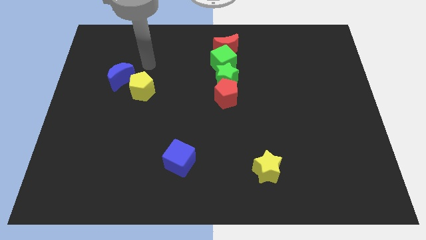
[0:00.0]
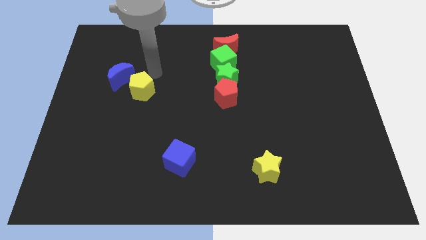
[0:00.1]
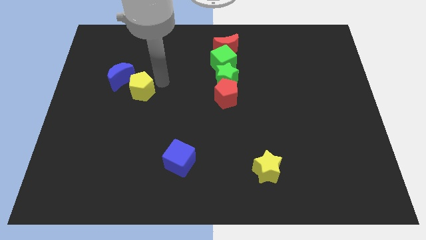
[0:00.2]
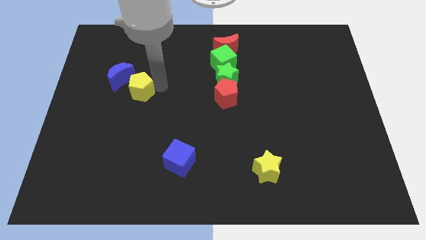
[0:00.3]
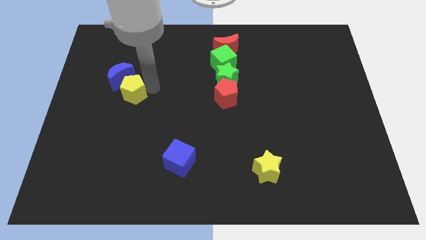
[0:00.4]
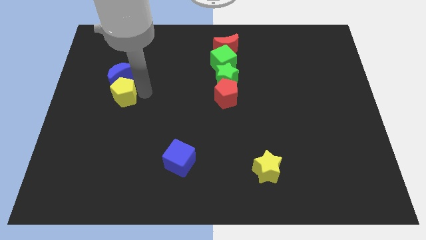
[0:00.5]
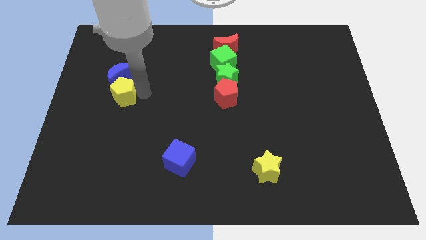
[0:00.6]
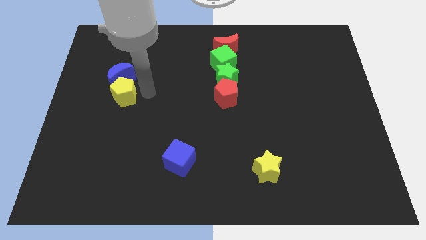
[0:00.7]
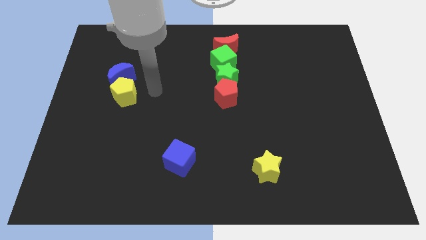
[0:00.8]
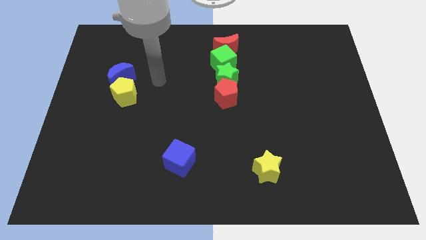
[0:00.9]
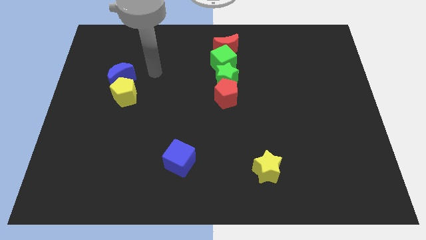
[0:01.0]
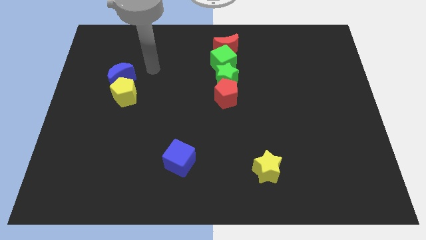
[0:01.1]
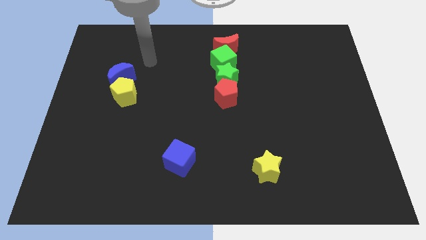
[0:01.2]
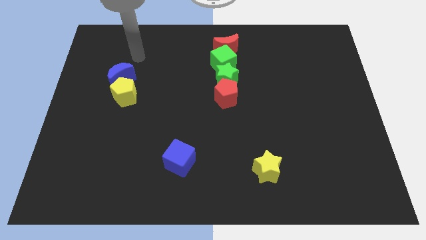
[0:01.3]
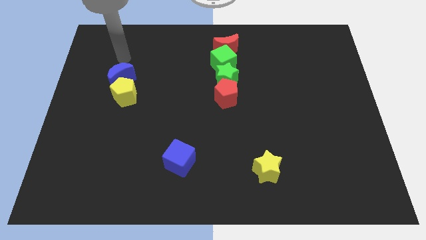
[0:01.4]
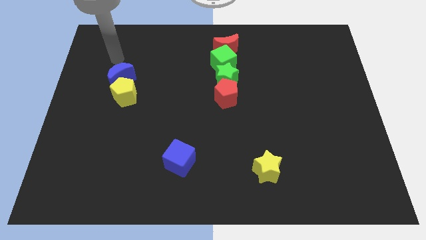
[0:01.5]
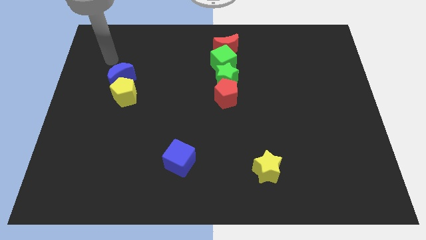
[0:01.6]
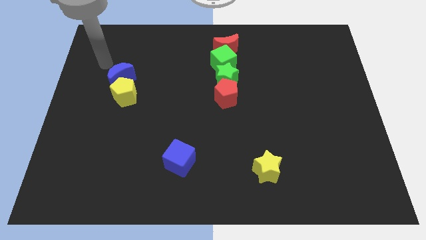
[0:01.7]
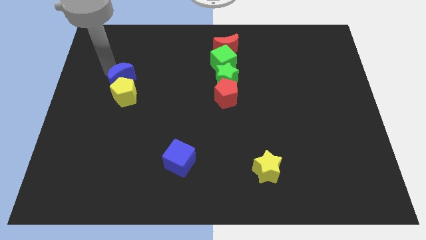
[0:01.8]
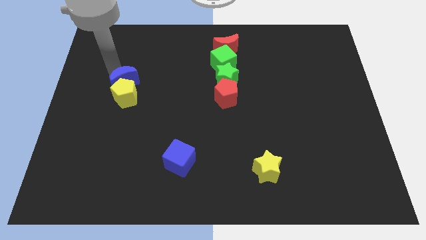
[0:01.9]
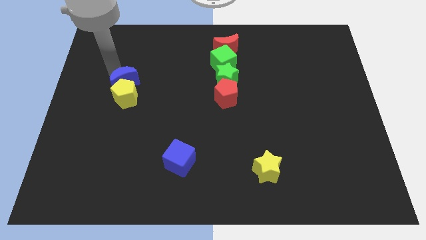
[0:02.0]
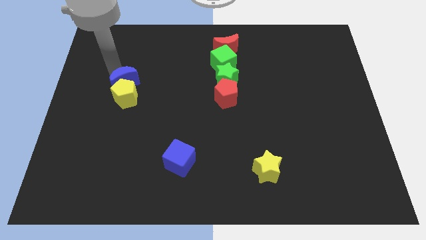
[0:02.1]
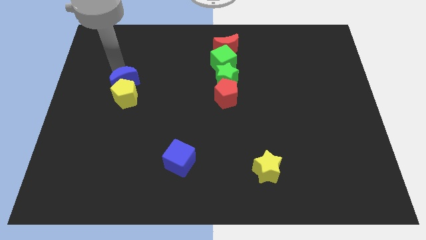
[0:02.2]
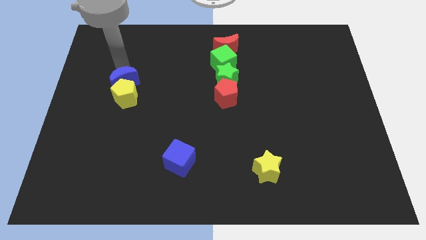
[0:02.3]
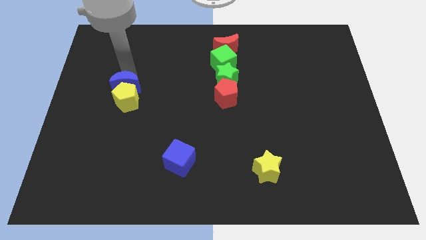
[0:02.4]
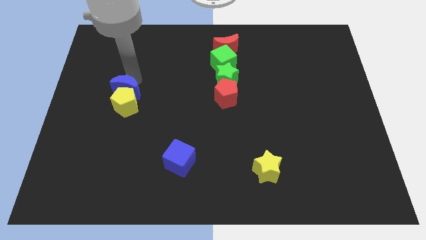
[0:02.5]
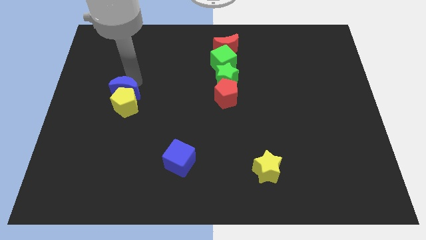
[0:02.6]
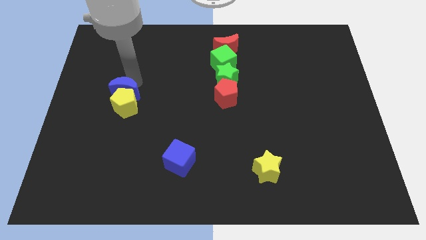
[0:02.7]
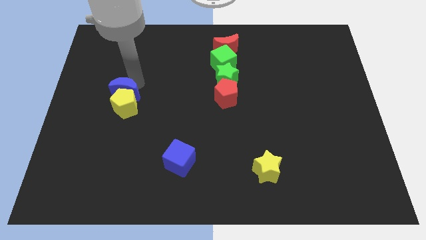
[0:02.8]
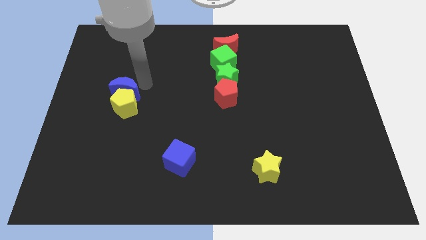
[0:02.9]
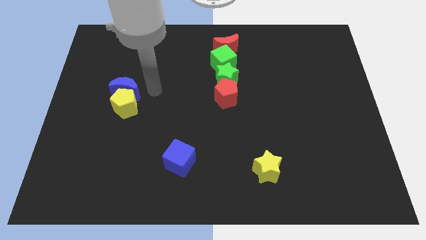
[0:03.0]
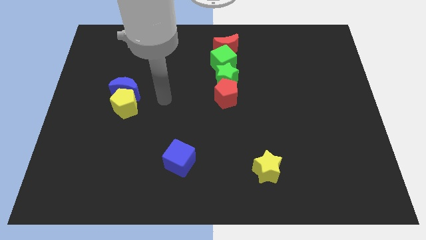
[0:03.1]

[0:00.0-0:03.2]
move the yellow pentagon along with blue moon towards bottom

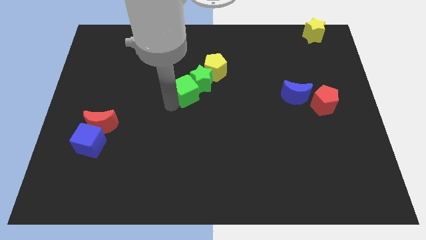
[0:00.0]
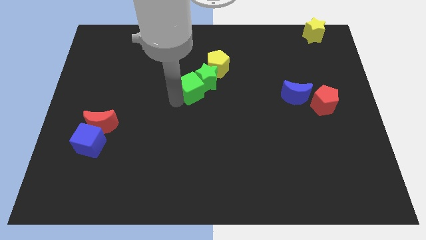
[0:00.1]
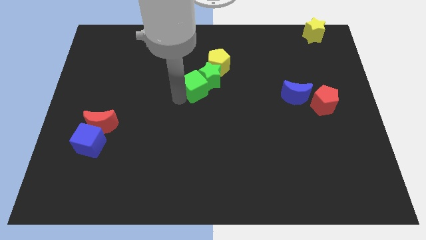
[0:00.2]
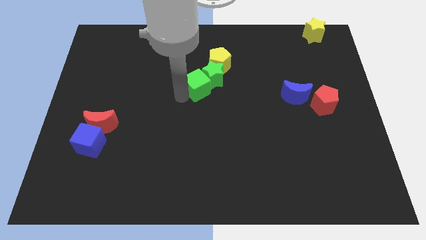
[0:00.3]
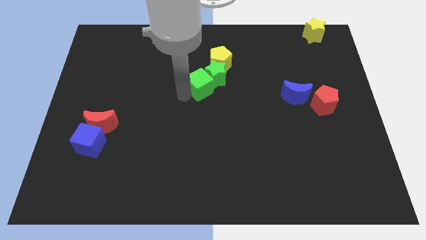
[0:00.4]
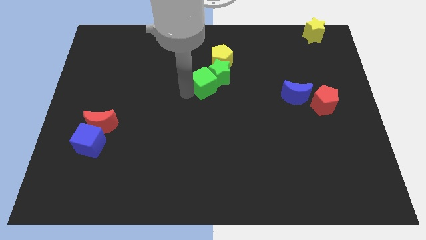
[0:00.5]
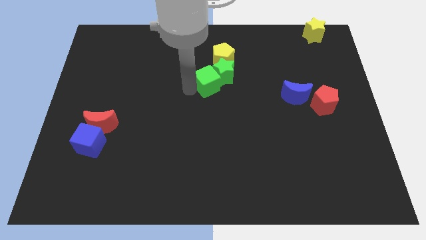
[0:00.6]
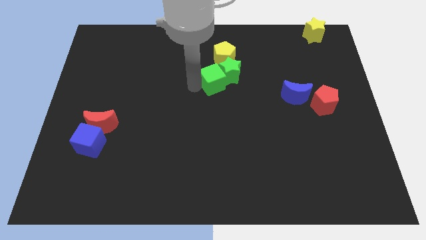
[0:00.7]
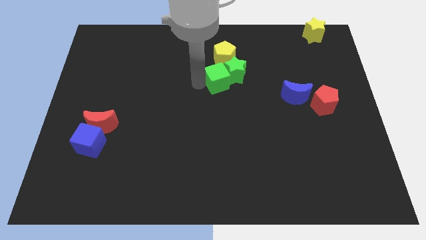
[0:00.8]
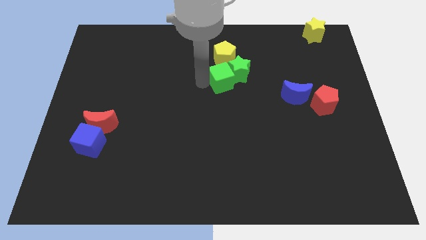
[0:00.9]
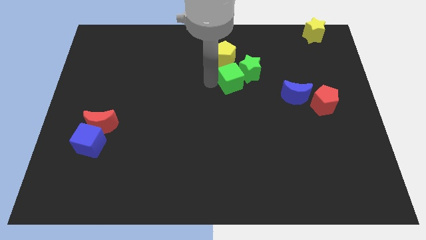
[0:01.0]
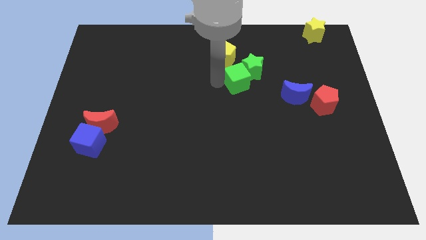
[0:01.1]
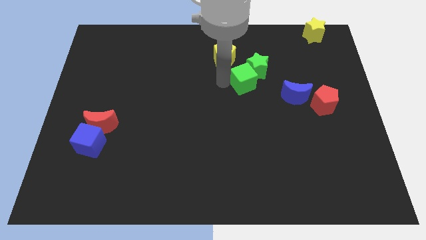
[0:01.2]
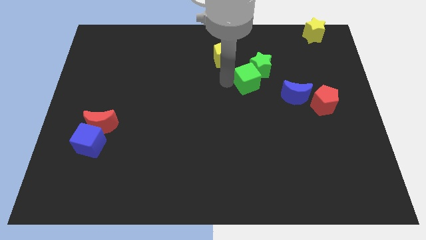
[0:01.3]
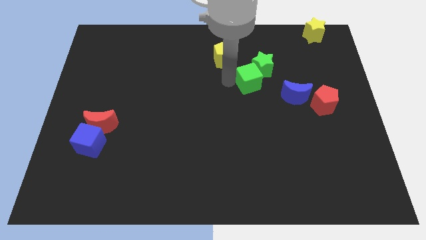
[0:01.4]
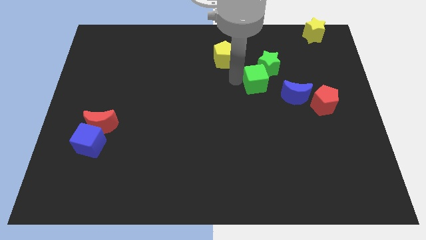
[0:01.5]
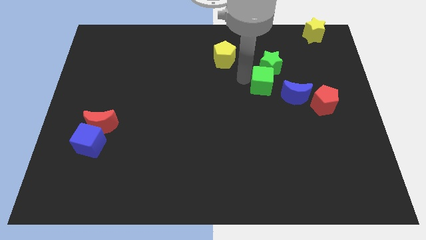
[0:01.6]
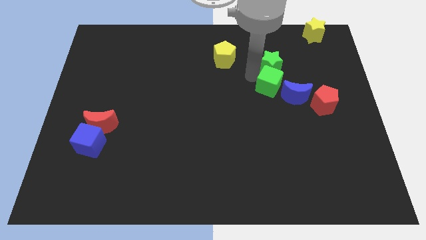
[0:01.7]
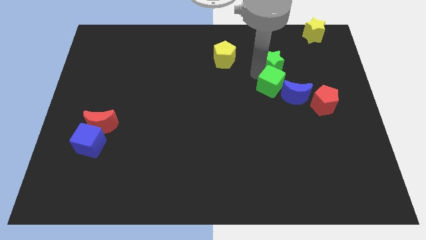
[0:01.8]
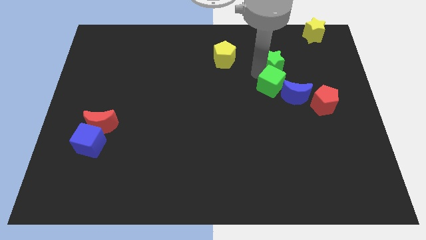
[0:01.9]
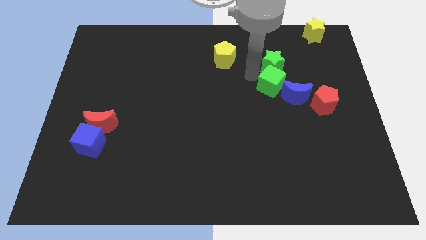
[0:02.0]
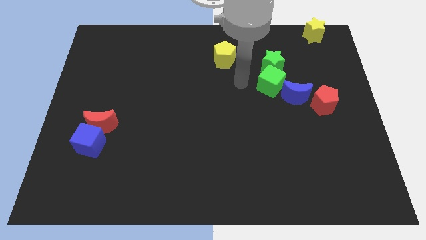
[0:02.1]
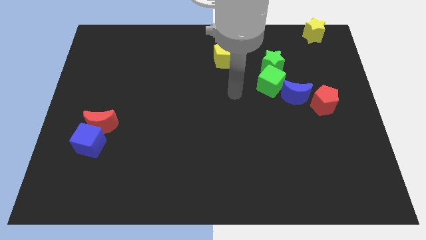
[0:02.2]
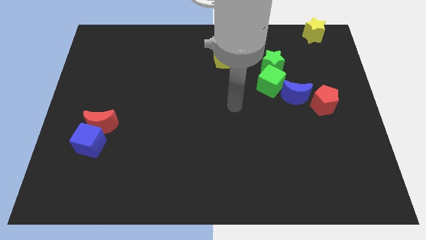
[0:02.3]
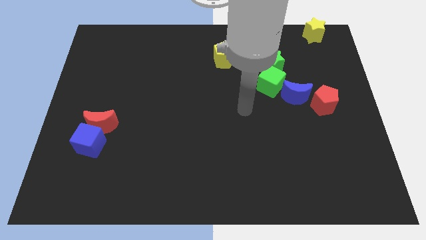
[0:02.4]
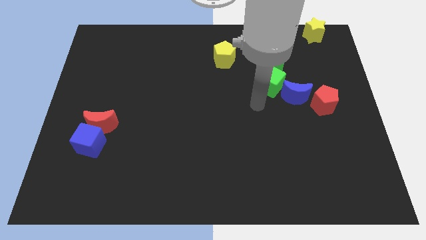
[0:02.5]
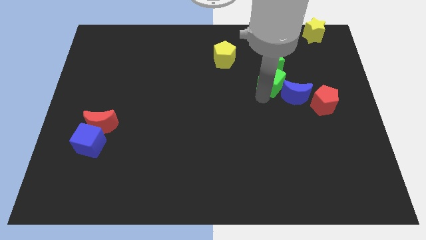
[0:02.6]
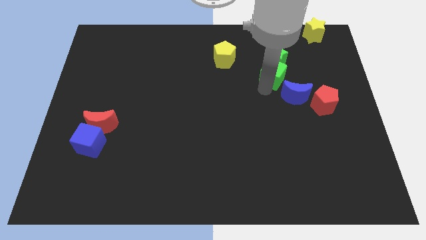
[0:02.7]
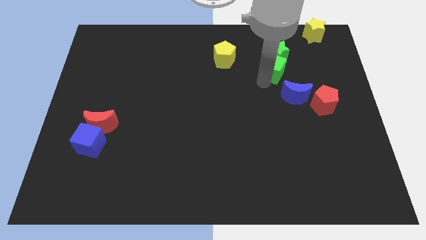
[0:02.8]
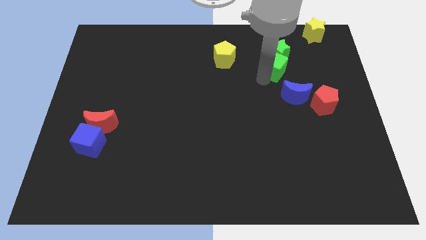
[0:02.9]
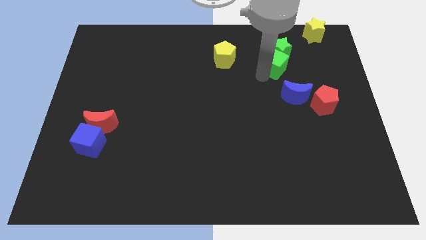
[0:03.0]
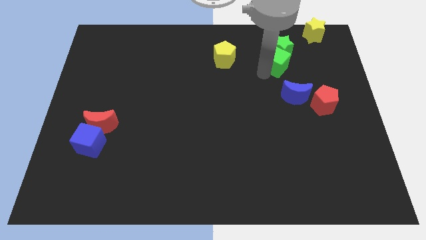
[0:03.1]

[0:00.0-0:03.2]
move the group of green blocks towards the yellow star

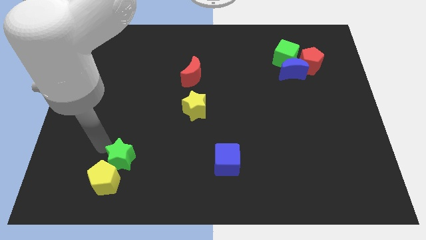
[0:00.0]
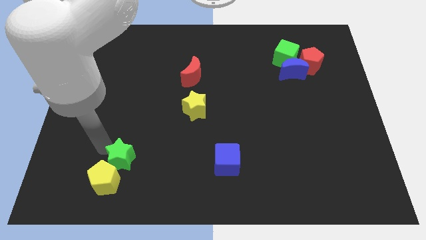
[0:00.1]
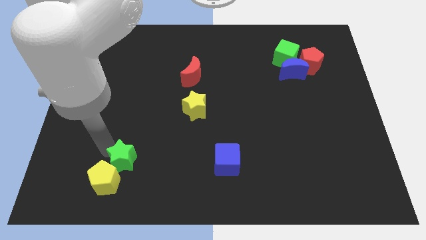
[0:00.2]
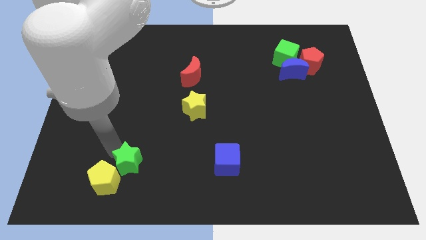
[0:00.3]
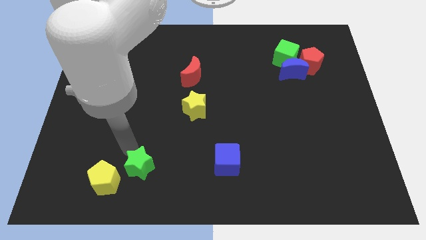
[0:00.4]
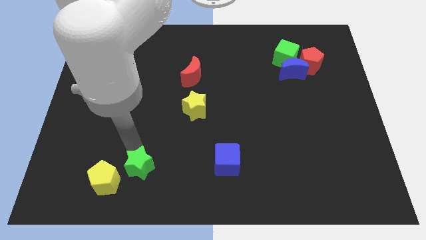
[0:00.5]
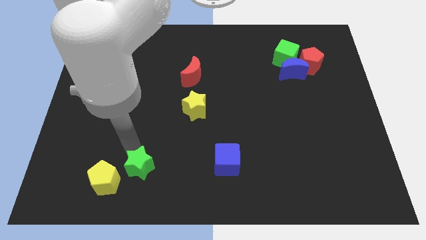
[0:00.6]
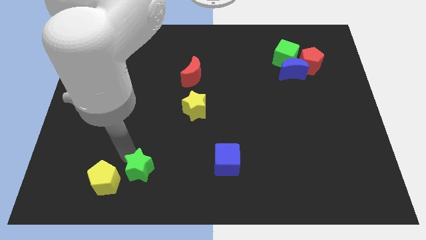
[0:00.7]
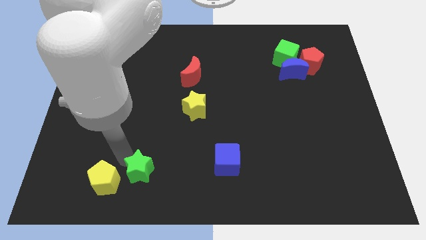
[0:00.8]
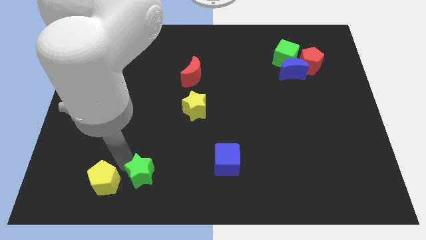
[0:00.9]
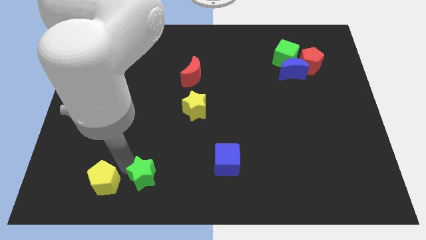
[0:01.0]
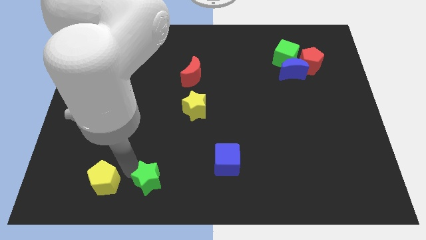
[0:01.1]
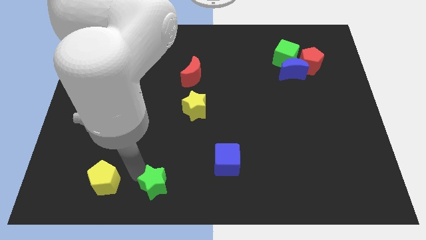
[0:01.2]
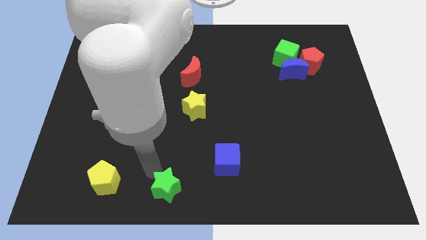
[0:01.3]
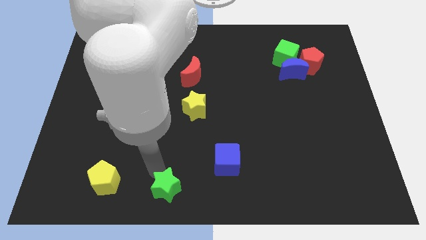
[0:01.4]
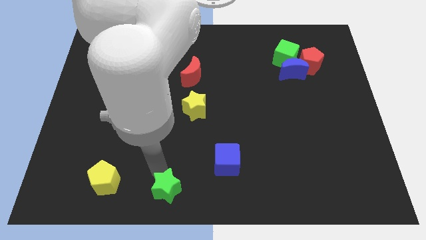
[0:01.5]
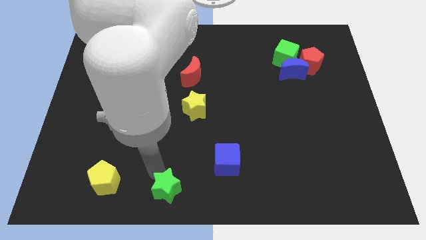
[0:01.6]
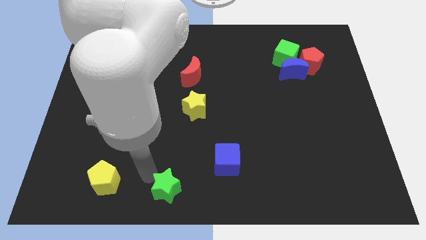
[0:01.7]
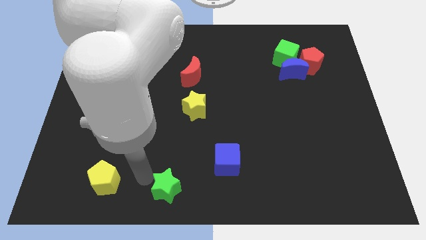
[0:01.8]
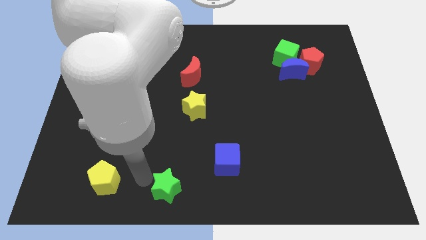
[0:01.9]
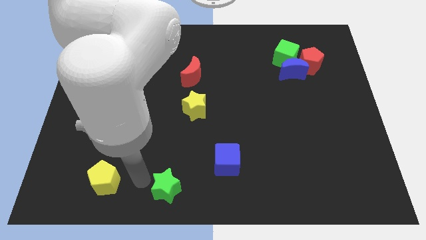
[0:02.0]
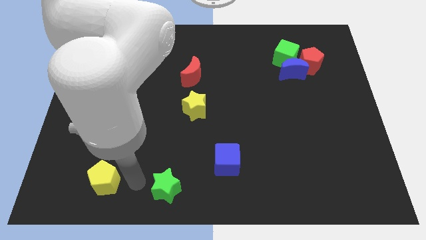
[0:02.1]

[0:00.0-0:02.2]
separate the green star from the yellow pentagon

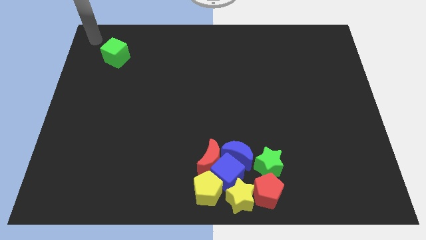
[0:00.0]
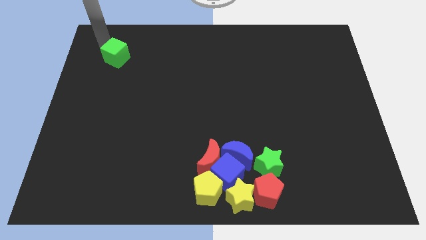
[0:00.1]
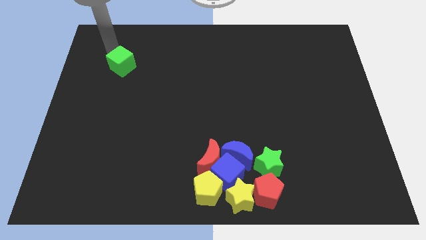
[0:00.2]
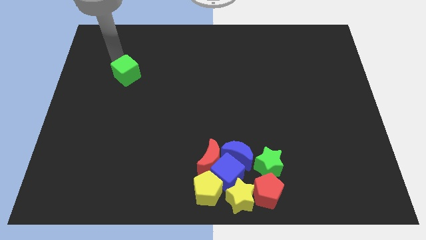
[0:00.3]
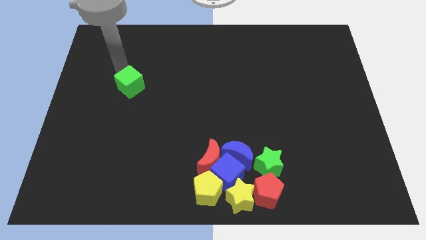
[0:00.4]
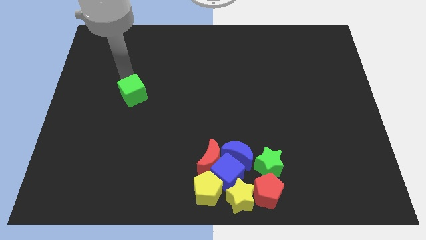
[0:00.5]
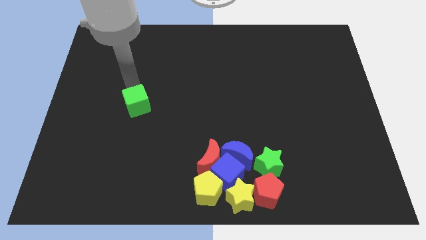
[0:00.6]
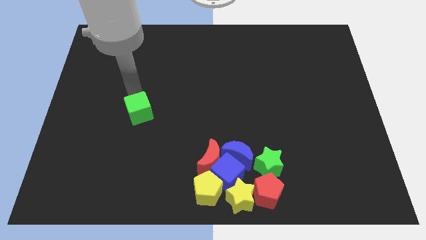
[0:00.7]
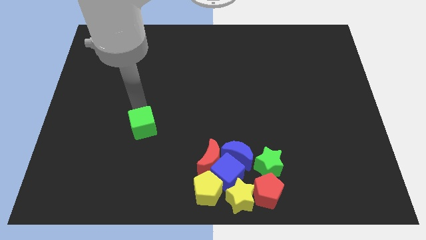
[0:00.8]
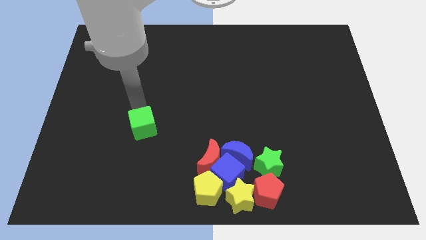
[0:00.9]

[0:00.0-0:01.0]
push the green cube towards the bottom
